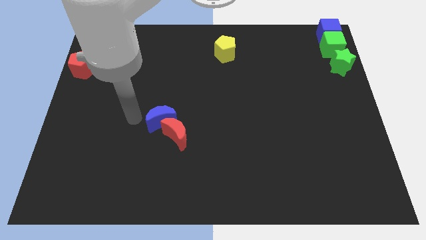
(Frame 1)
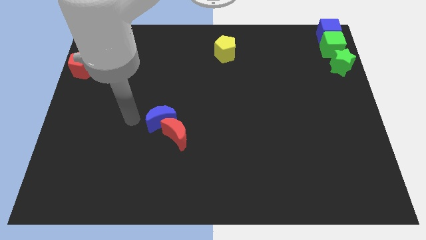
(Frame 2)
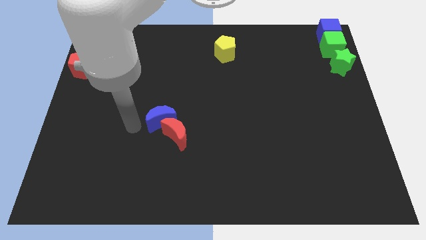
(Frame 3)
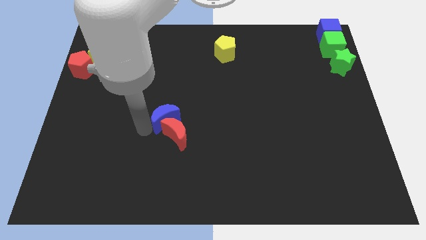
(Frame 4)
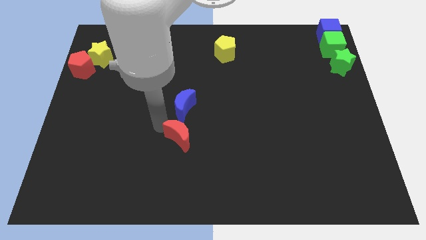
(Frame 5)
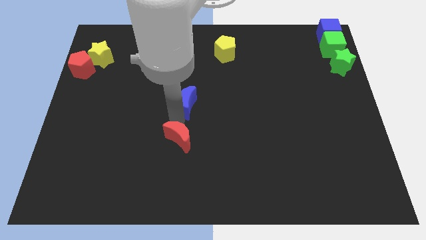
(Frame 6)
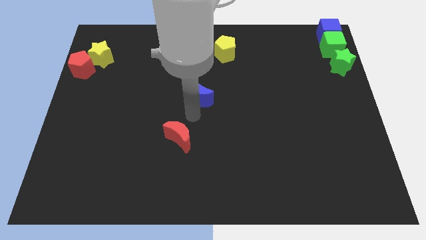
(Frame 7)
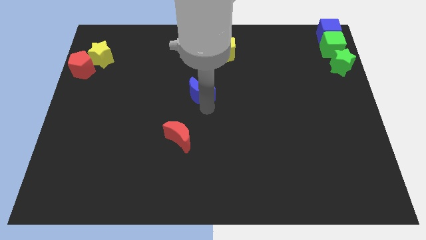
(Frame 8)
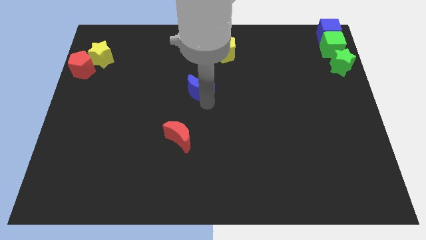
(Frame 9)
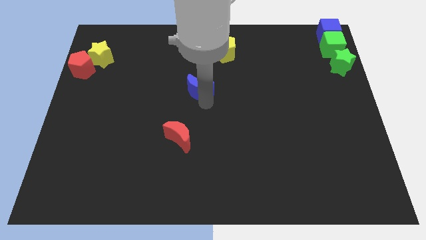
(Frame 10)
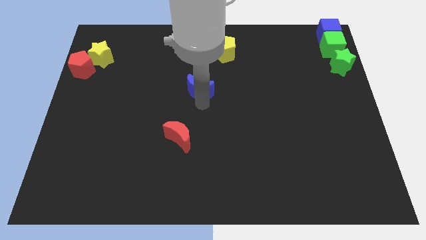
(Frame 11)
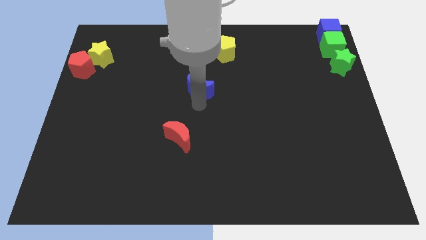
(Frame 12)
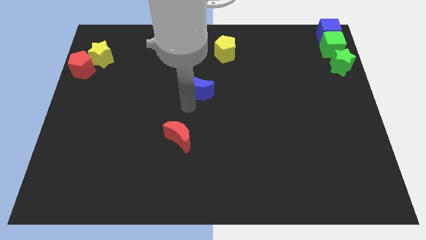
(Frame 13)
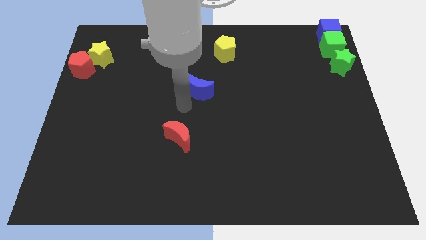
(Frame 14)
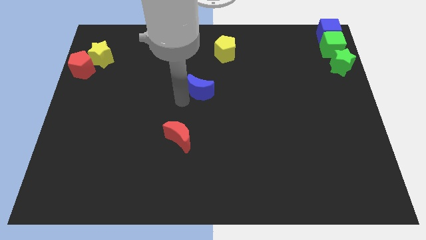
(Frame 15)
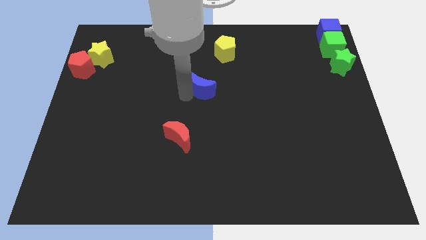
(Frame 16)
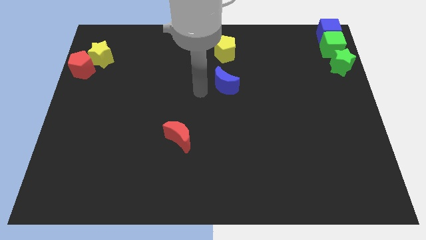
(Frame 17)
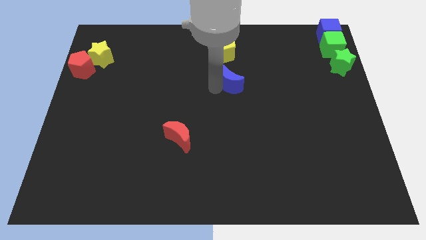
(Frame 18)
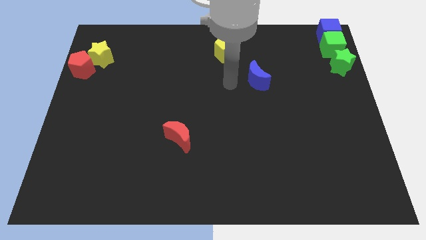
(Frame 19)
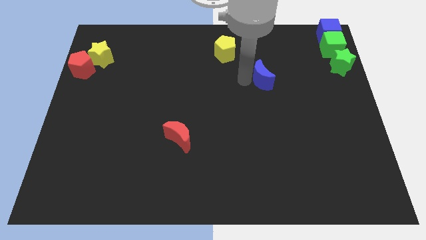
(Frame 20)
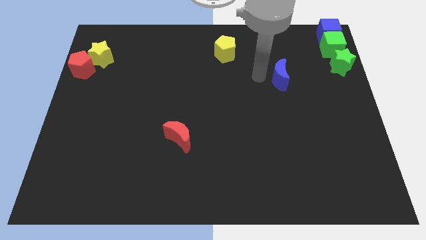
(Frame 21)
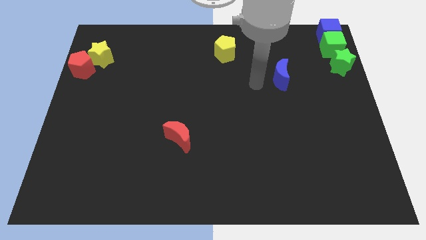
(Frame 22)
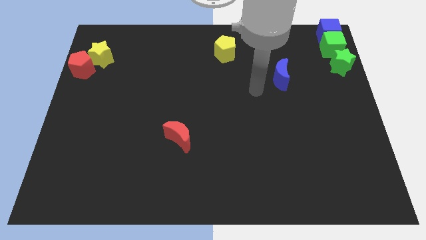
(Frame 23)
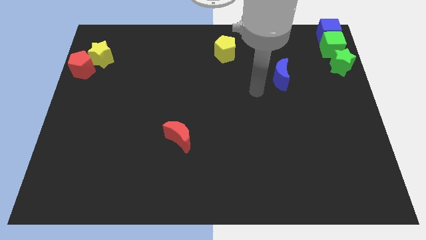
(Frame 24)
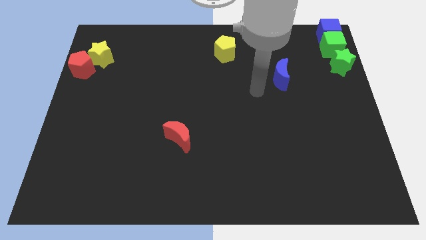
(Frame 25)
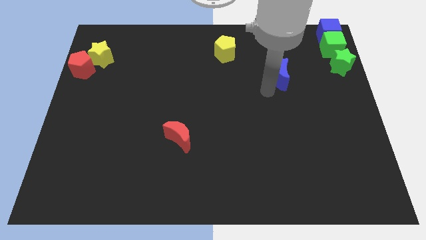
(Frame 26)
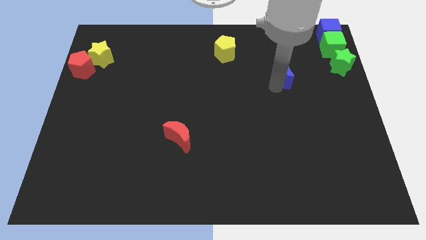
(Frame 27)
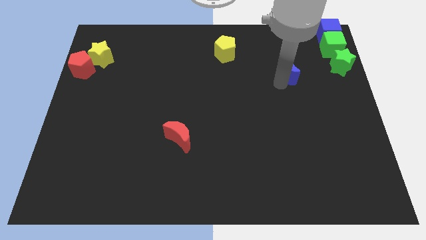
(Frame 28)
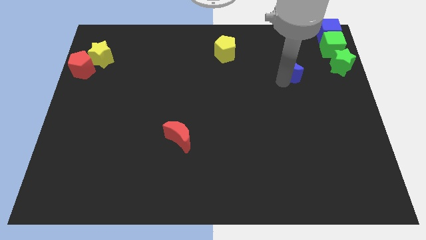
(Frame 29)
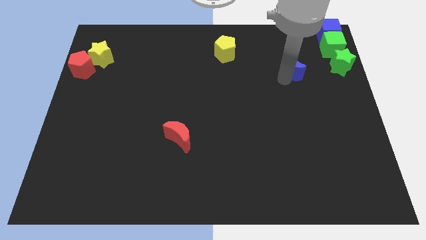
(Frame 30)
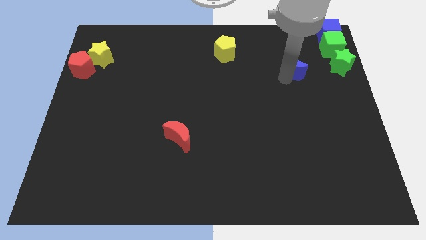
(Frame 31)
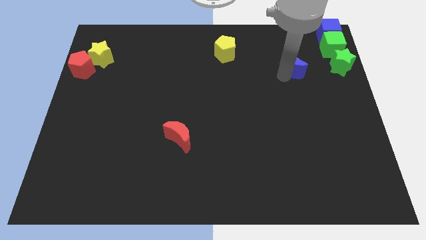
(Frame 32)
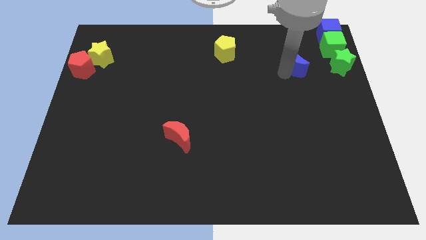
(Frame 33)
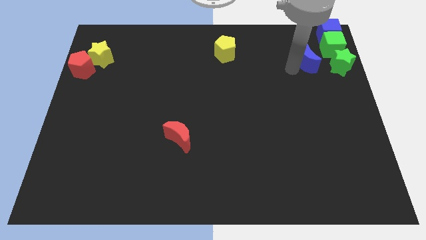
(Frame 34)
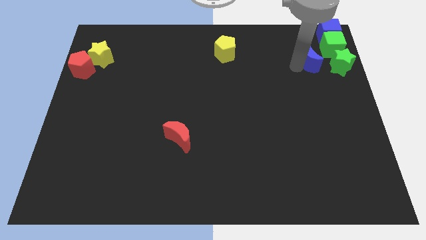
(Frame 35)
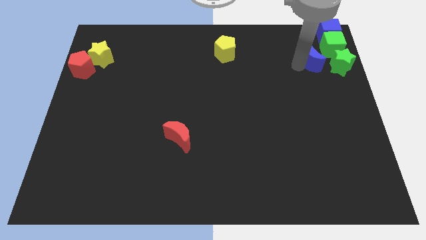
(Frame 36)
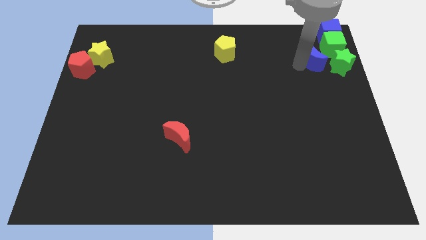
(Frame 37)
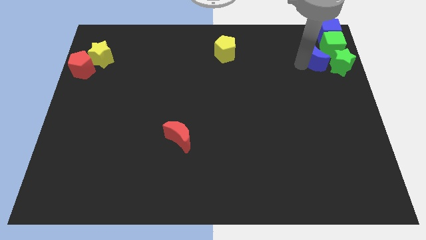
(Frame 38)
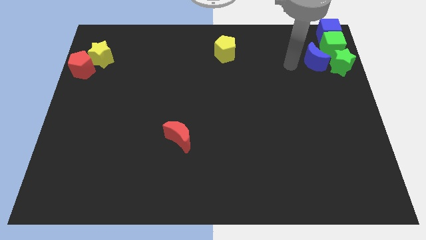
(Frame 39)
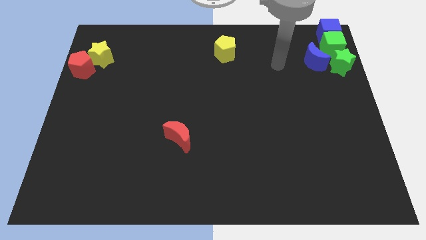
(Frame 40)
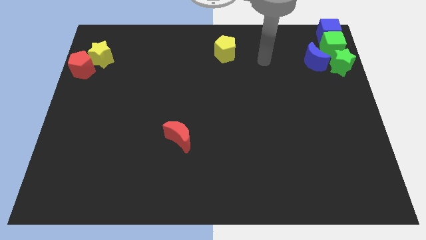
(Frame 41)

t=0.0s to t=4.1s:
push the blue moon to left of green star

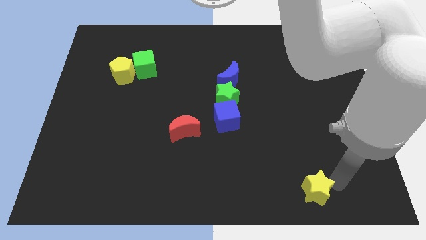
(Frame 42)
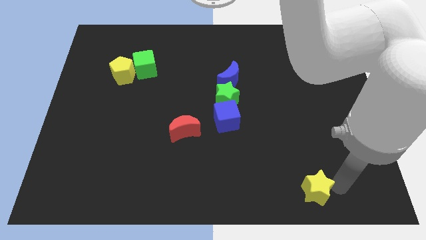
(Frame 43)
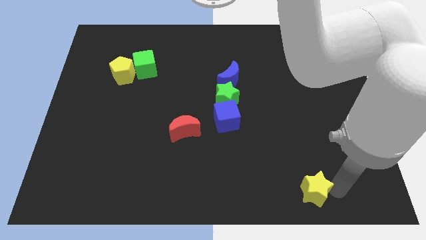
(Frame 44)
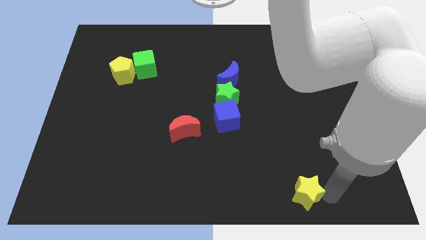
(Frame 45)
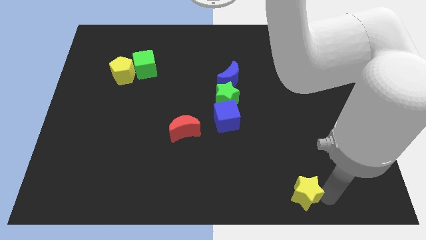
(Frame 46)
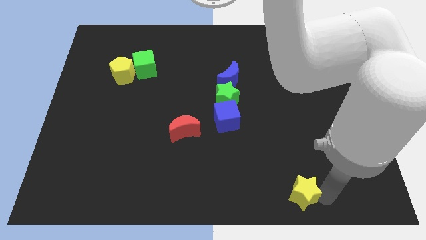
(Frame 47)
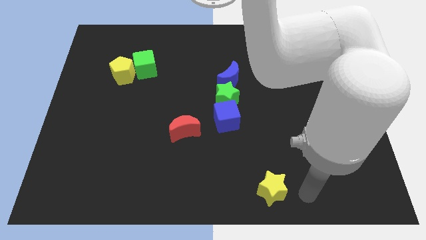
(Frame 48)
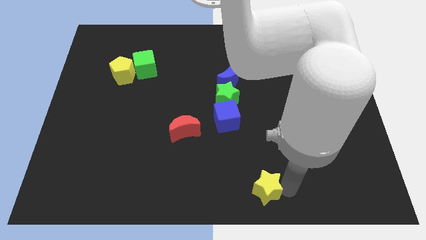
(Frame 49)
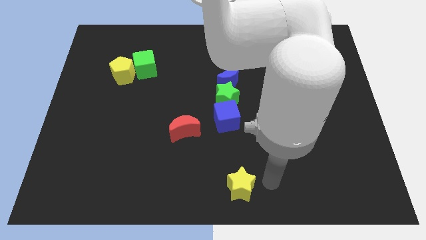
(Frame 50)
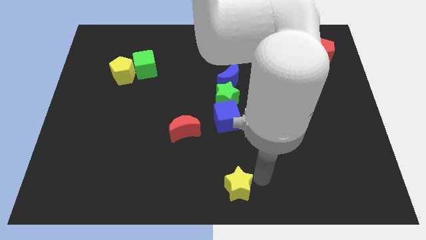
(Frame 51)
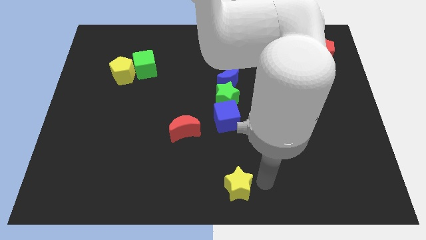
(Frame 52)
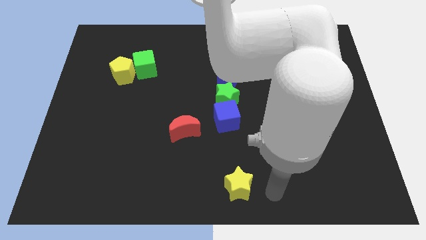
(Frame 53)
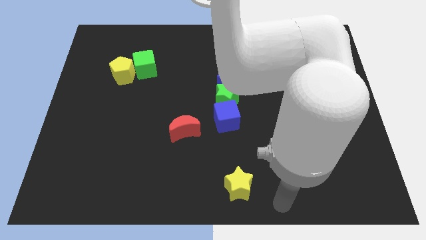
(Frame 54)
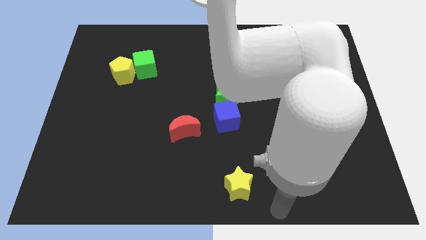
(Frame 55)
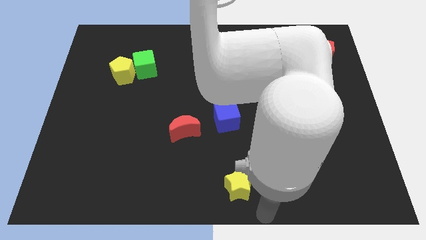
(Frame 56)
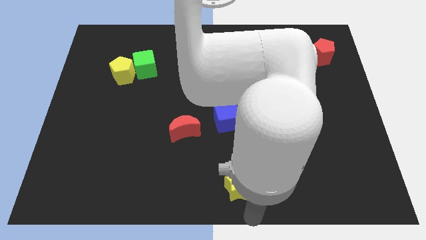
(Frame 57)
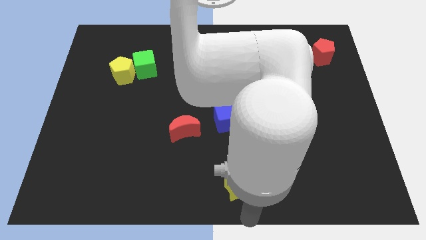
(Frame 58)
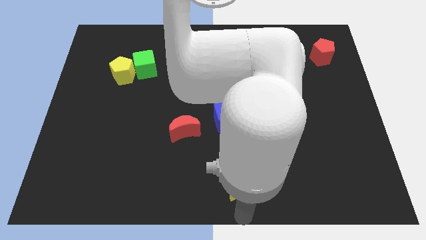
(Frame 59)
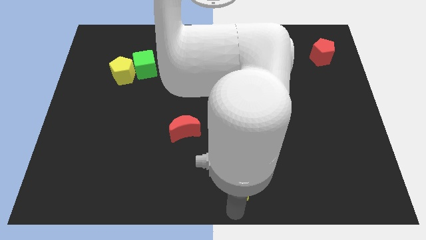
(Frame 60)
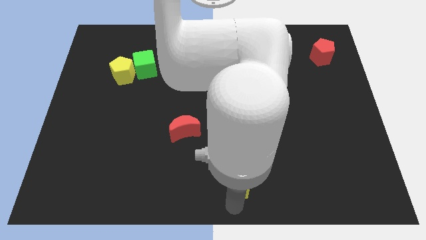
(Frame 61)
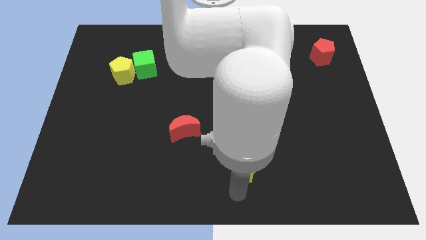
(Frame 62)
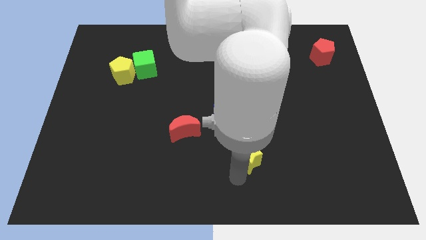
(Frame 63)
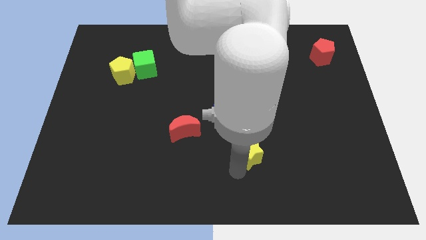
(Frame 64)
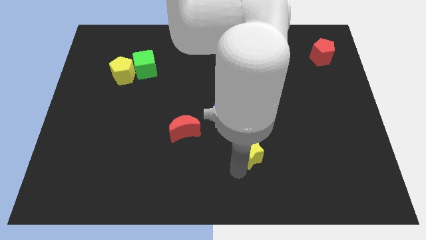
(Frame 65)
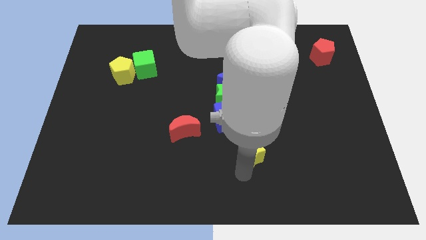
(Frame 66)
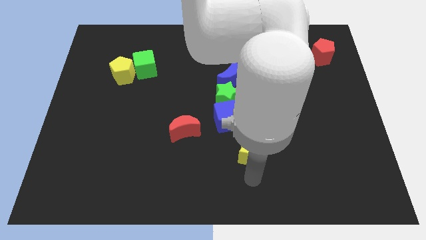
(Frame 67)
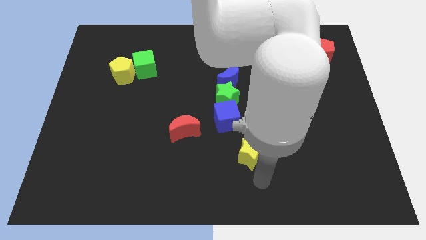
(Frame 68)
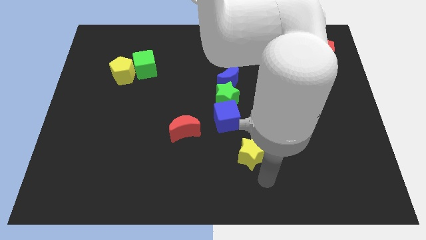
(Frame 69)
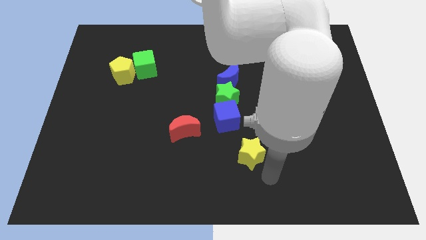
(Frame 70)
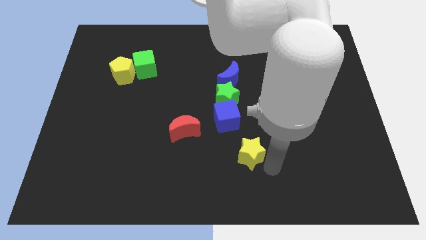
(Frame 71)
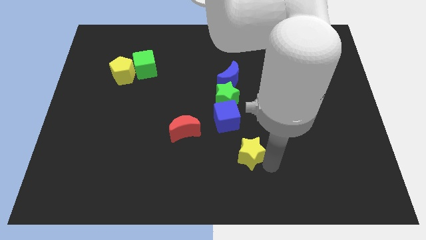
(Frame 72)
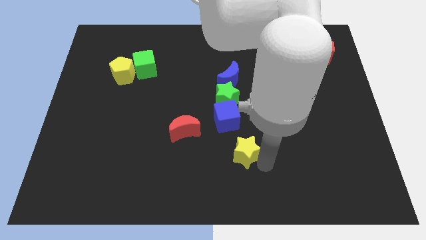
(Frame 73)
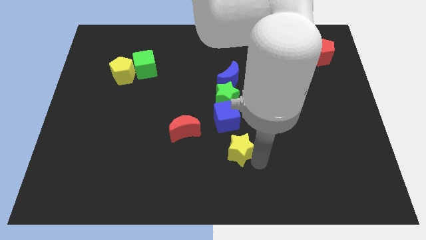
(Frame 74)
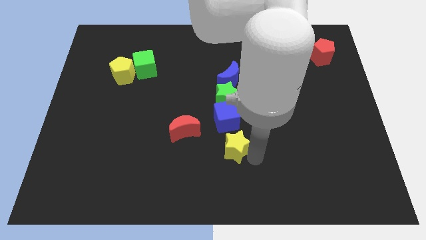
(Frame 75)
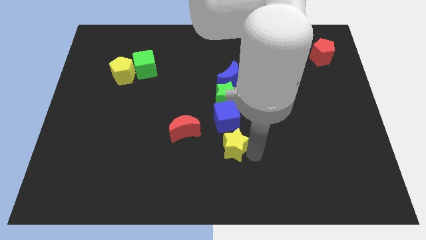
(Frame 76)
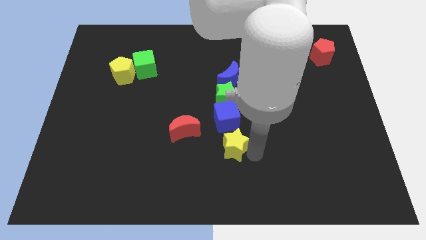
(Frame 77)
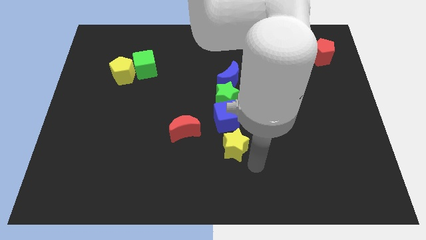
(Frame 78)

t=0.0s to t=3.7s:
move the yellow star towards the bottom of the blue cube

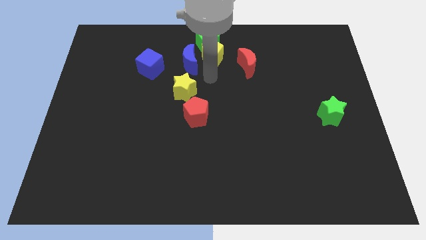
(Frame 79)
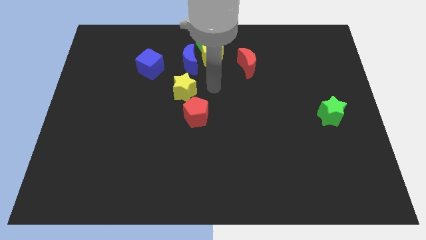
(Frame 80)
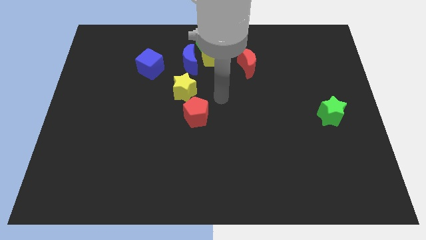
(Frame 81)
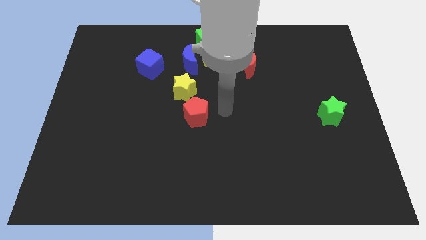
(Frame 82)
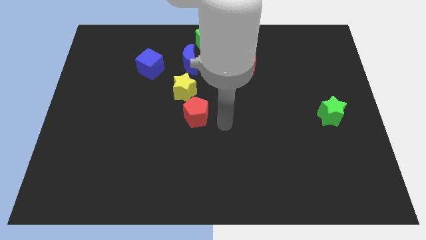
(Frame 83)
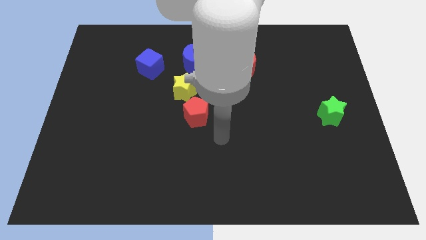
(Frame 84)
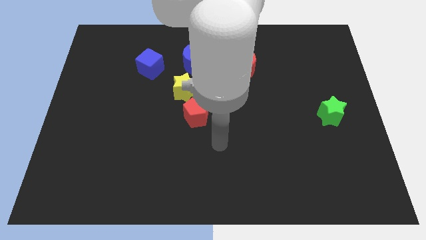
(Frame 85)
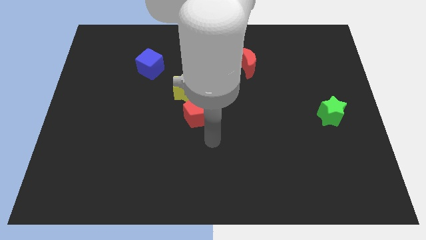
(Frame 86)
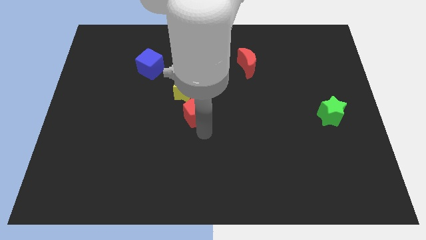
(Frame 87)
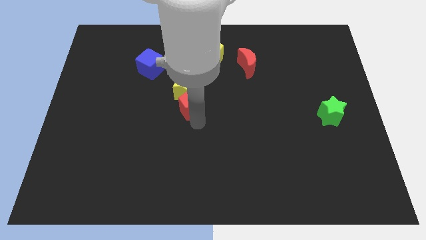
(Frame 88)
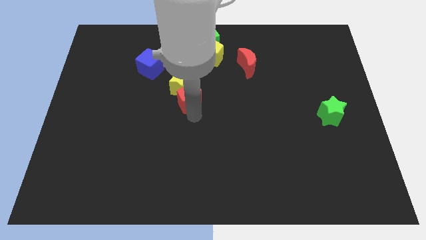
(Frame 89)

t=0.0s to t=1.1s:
push the red pentagon into the yellow star

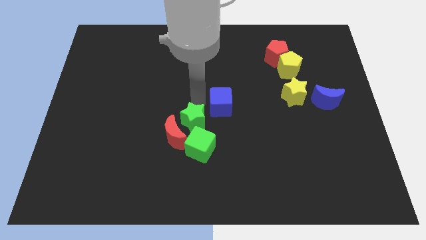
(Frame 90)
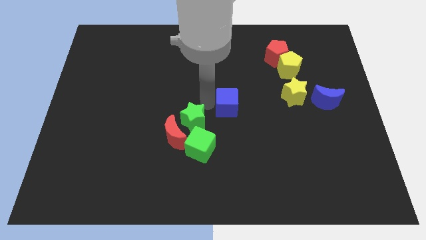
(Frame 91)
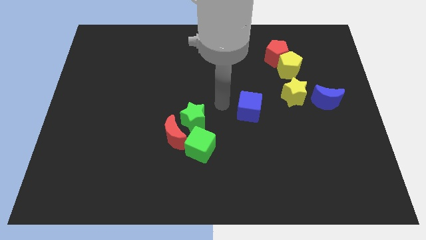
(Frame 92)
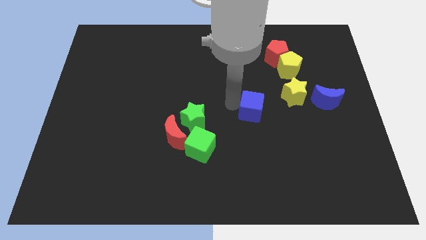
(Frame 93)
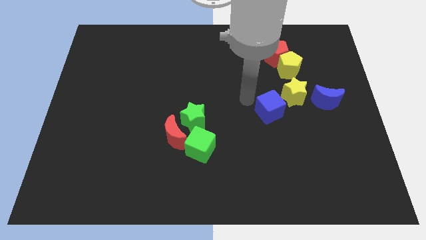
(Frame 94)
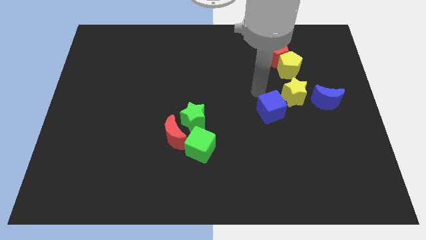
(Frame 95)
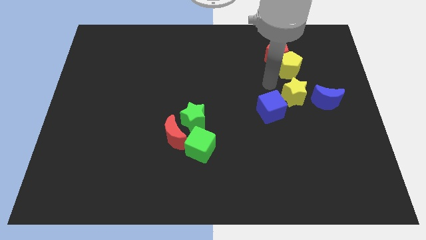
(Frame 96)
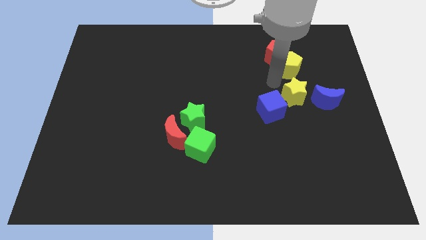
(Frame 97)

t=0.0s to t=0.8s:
push the blue cube towards the yellows star
